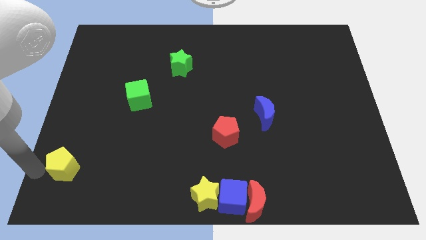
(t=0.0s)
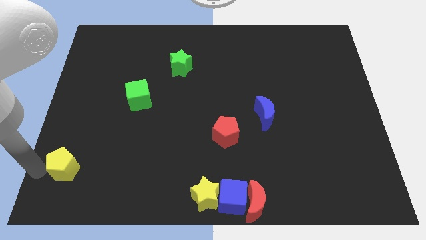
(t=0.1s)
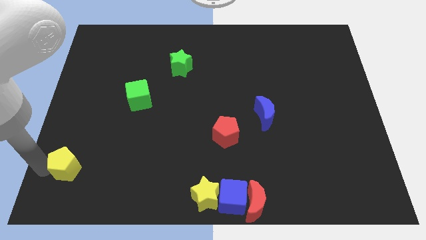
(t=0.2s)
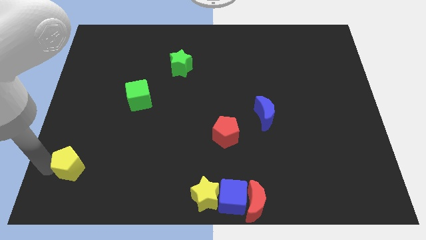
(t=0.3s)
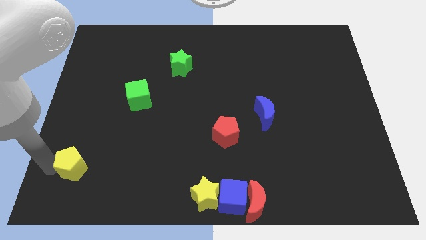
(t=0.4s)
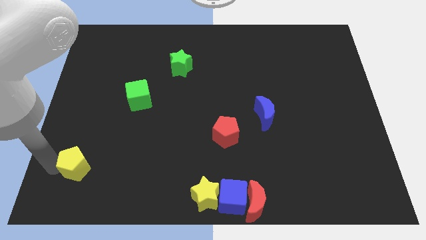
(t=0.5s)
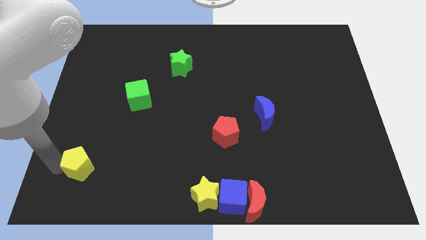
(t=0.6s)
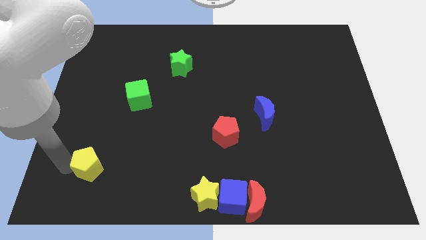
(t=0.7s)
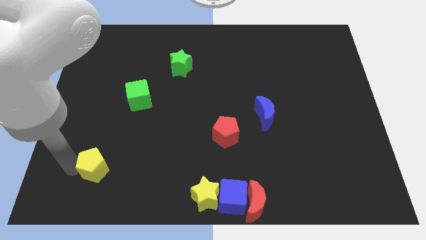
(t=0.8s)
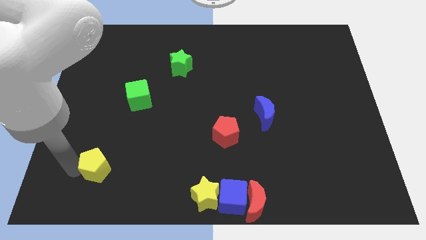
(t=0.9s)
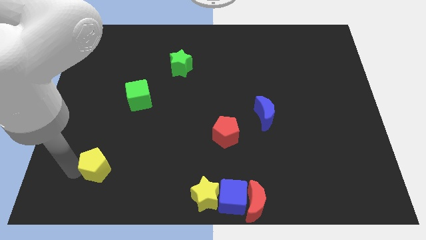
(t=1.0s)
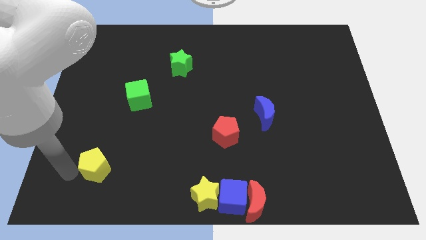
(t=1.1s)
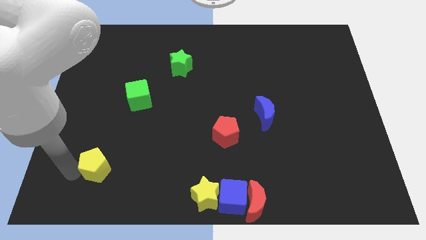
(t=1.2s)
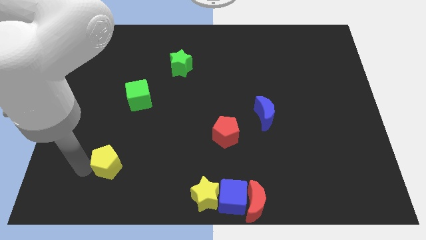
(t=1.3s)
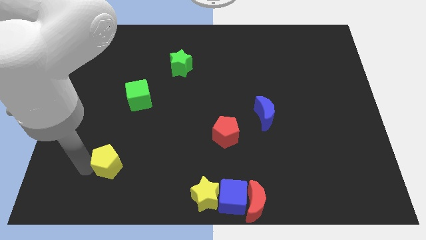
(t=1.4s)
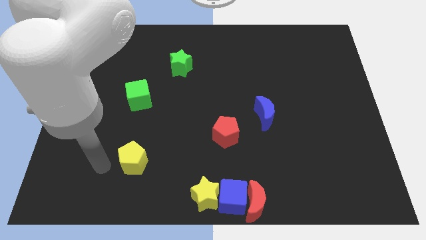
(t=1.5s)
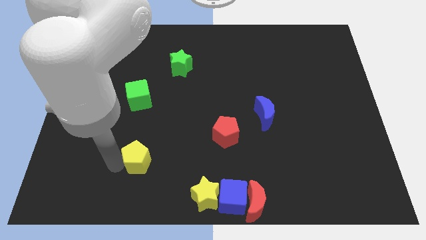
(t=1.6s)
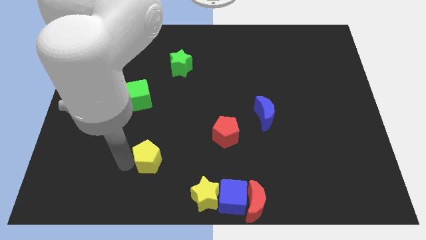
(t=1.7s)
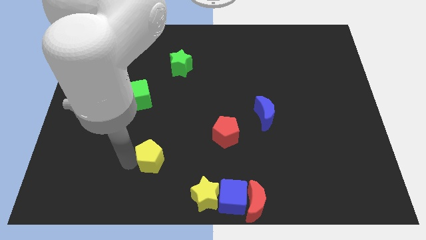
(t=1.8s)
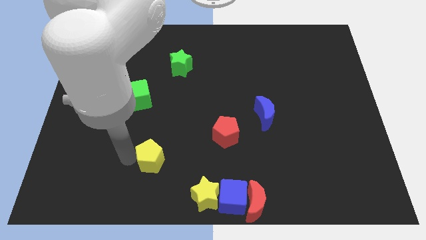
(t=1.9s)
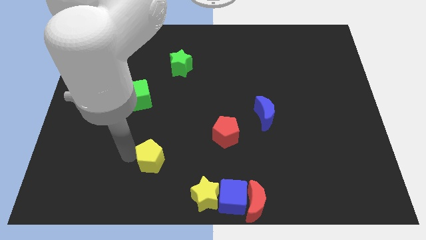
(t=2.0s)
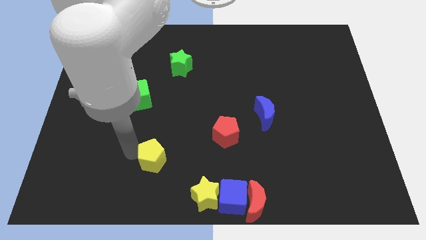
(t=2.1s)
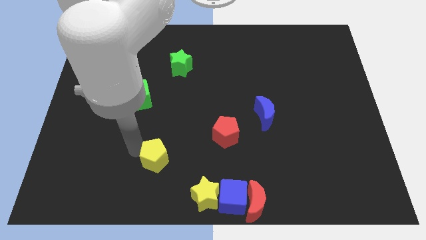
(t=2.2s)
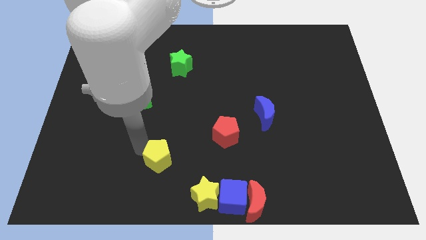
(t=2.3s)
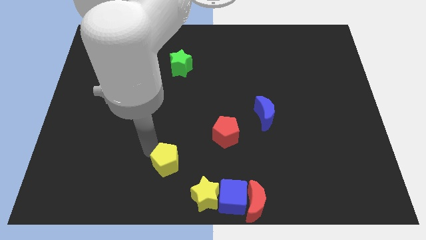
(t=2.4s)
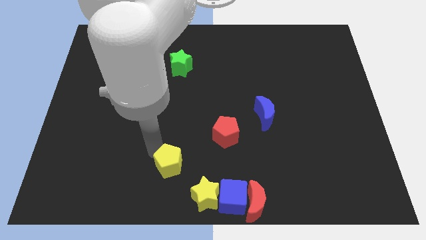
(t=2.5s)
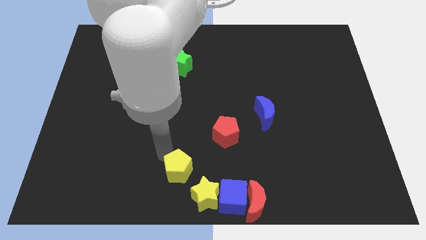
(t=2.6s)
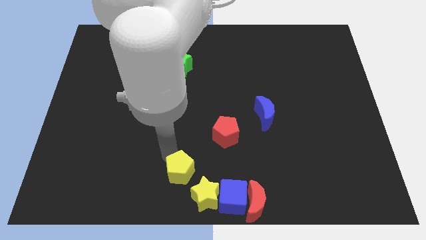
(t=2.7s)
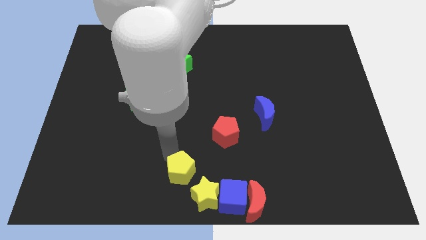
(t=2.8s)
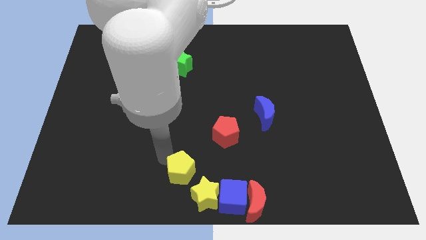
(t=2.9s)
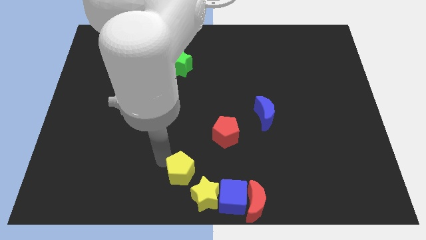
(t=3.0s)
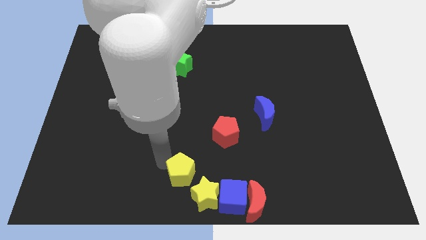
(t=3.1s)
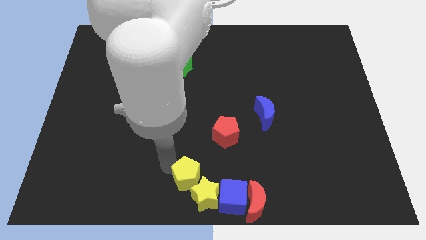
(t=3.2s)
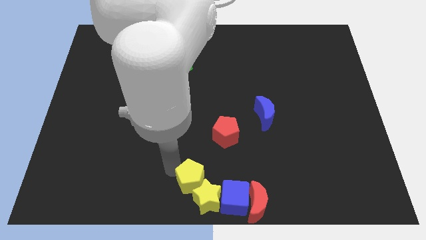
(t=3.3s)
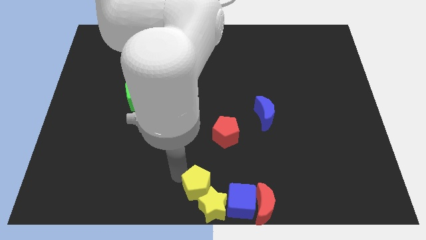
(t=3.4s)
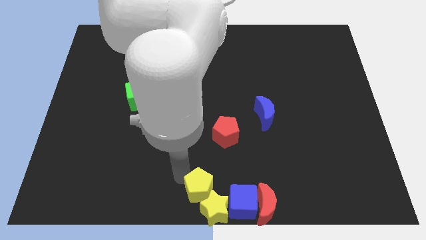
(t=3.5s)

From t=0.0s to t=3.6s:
put the yellow pentagon into the yellow star

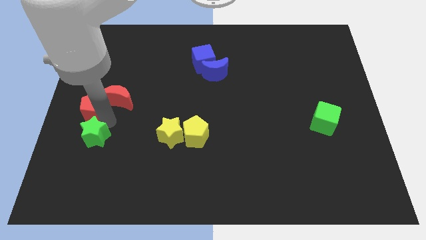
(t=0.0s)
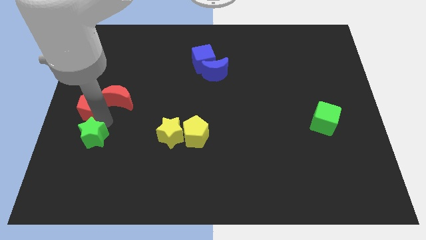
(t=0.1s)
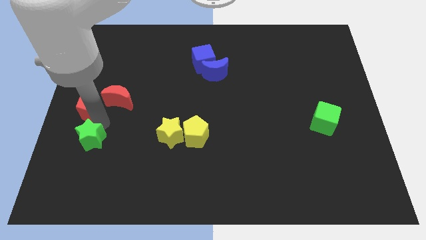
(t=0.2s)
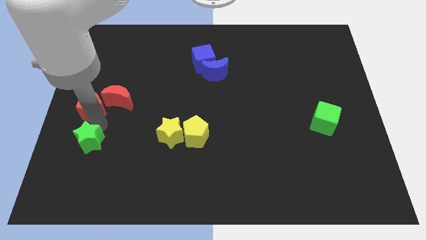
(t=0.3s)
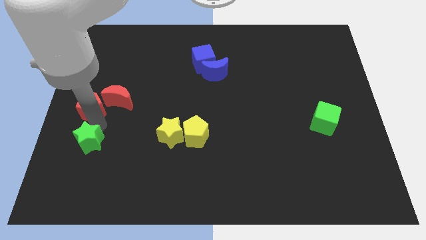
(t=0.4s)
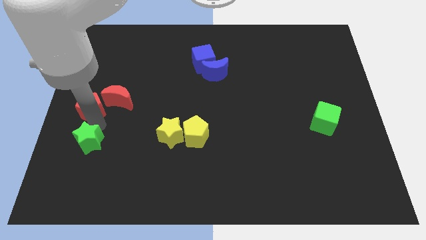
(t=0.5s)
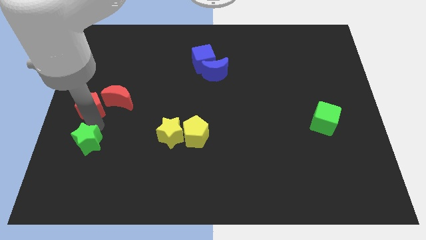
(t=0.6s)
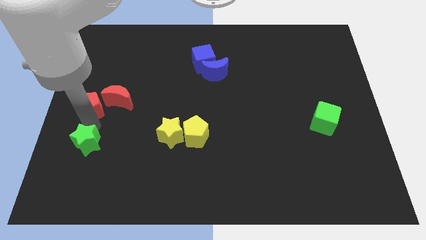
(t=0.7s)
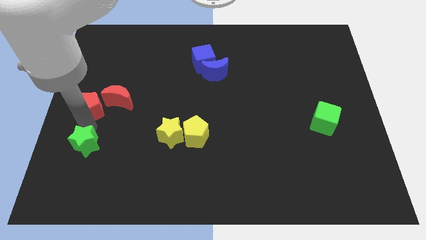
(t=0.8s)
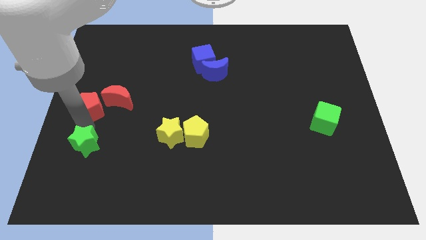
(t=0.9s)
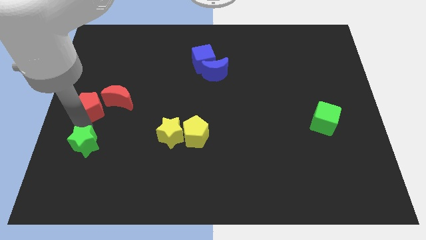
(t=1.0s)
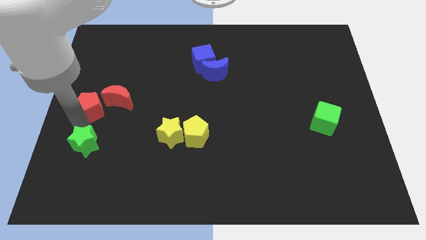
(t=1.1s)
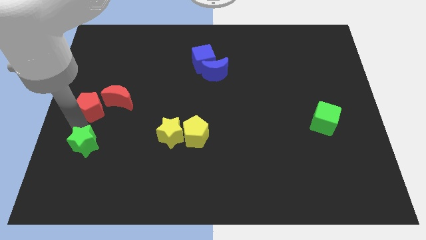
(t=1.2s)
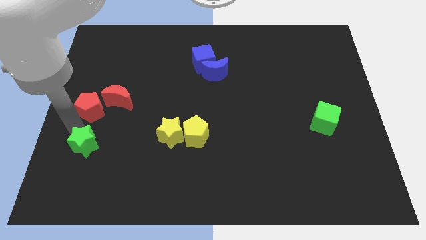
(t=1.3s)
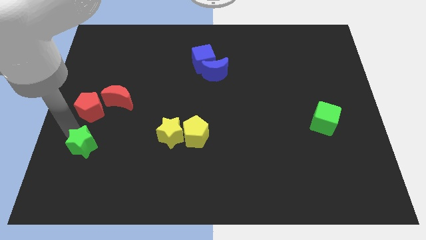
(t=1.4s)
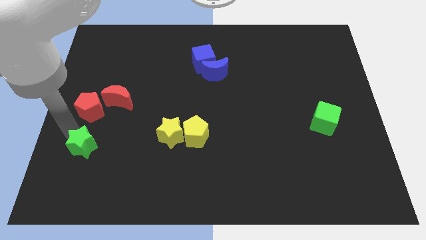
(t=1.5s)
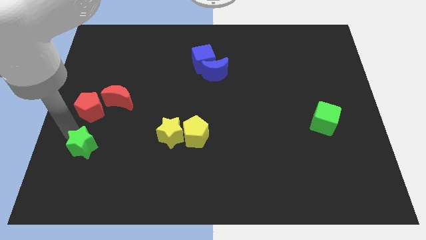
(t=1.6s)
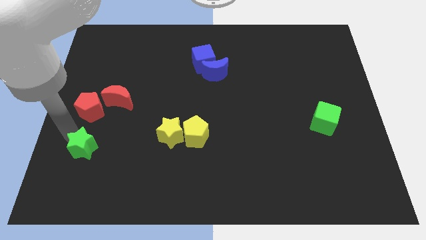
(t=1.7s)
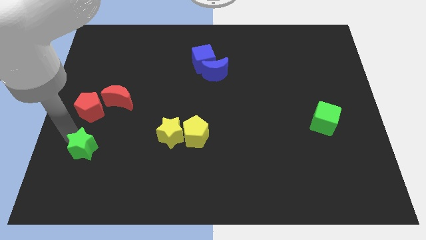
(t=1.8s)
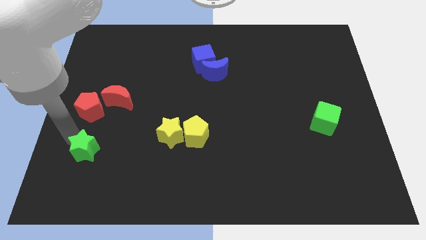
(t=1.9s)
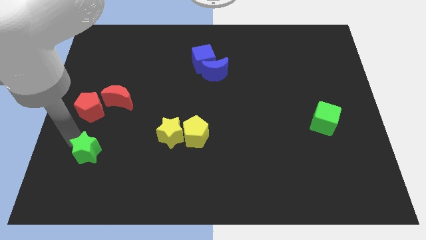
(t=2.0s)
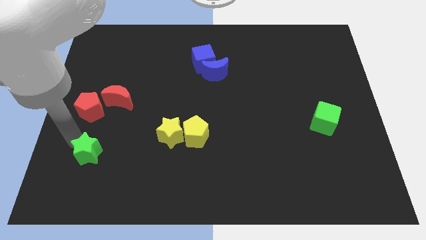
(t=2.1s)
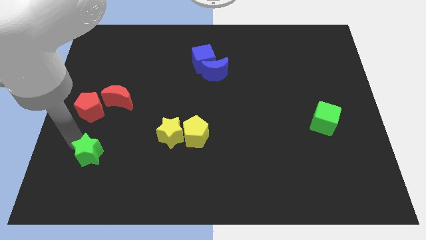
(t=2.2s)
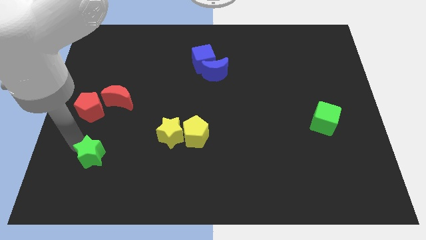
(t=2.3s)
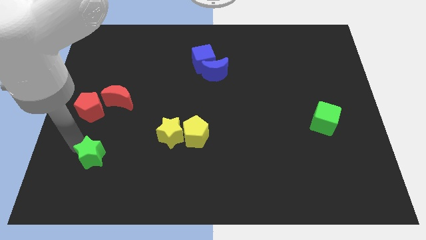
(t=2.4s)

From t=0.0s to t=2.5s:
move the green star away from the red pentagon

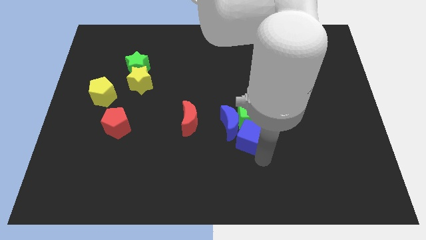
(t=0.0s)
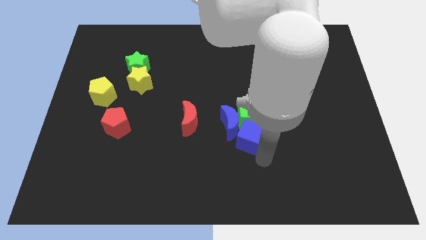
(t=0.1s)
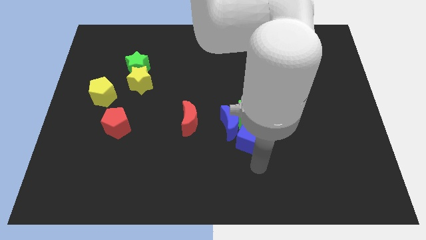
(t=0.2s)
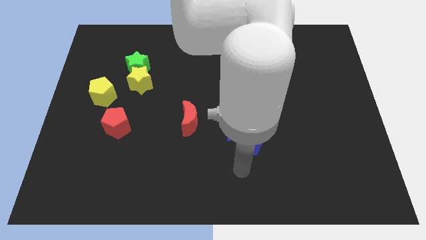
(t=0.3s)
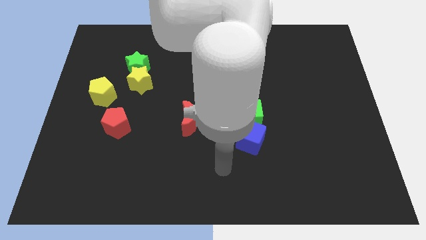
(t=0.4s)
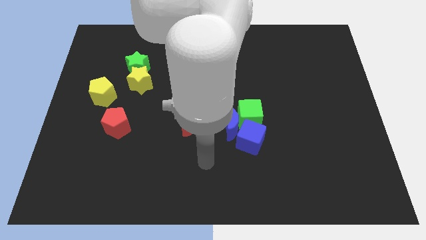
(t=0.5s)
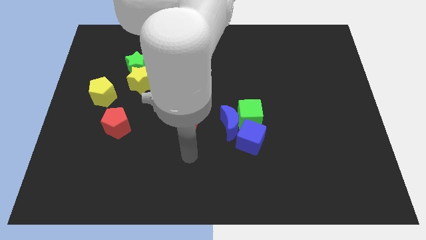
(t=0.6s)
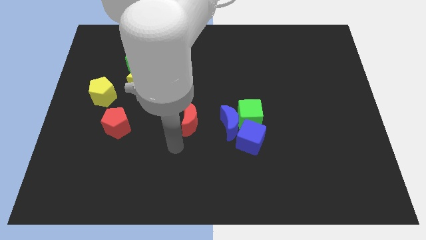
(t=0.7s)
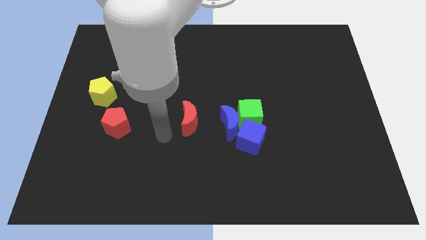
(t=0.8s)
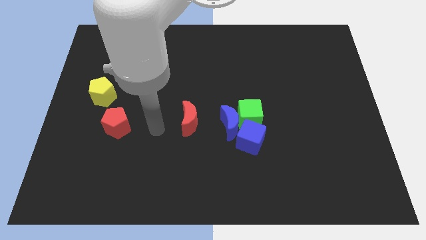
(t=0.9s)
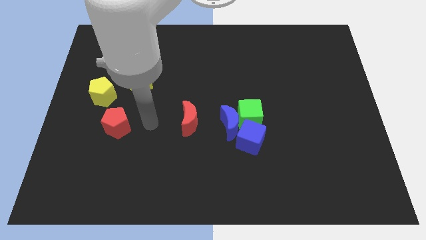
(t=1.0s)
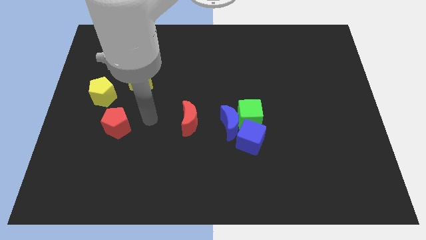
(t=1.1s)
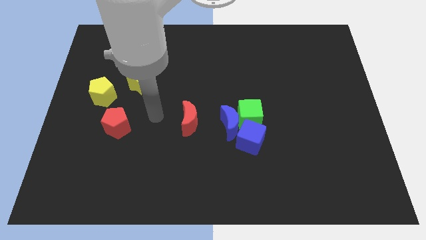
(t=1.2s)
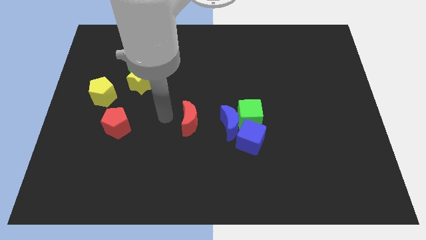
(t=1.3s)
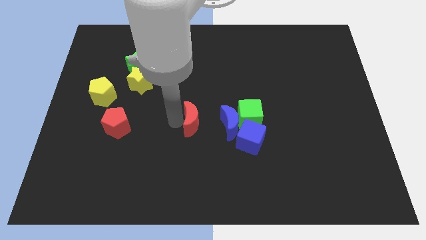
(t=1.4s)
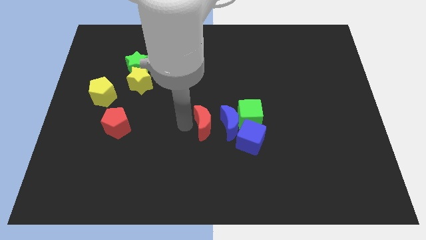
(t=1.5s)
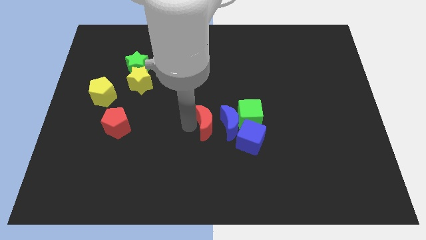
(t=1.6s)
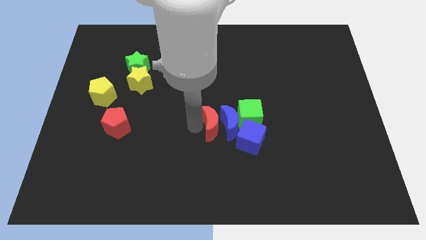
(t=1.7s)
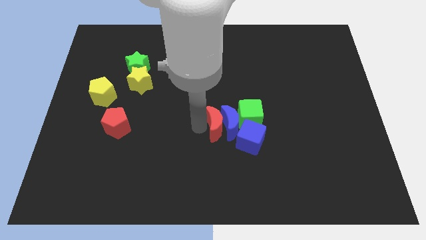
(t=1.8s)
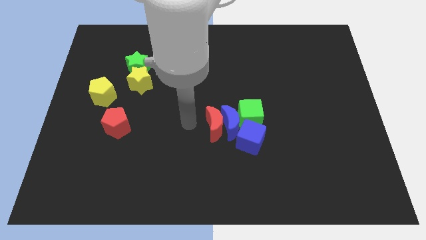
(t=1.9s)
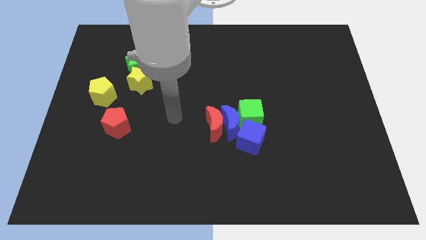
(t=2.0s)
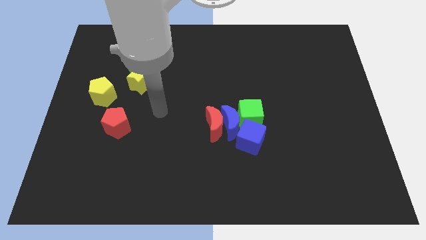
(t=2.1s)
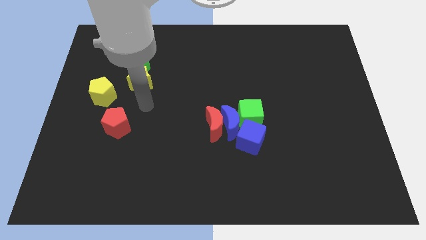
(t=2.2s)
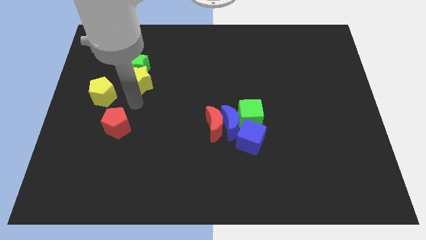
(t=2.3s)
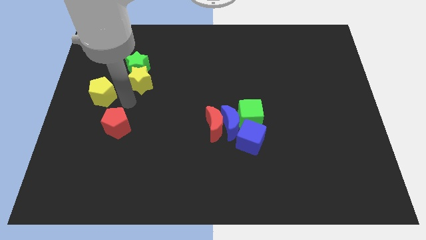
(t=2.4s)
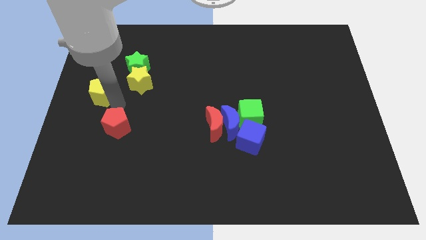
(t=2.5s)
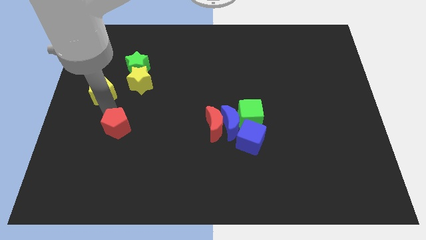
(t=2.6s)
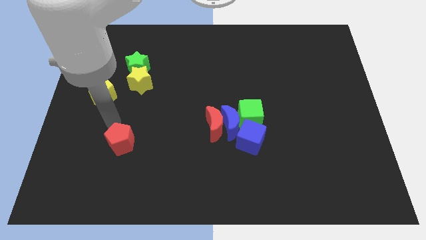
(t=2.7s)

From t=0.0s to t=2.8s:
push the red moon into the blue moon
